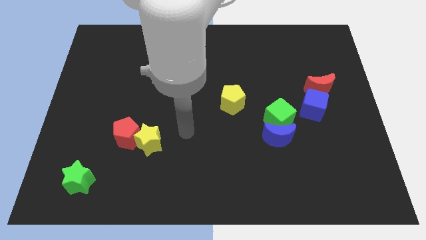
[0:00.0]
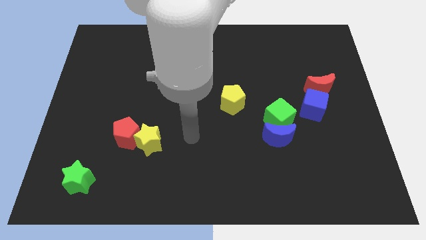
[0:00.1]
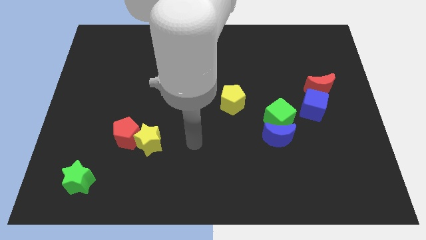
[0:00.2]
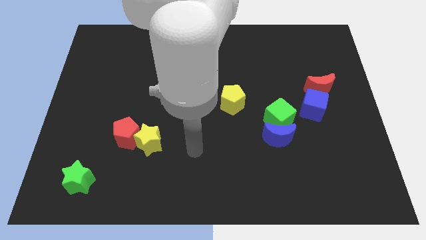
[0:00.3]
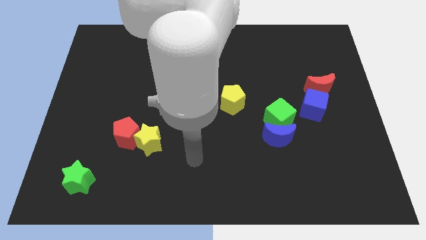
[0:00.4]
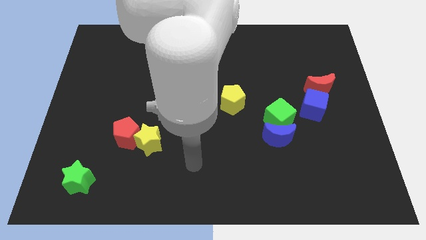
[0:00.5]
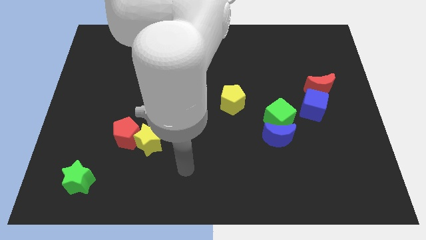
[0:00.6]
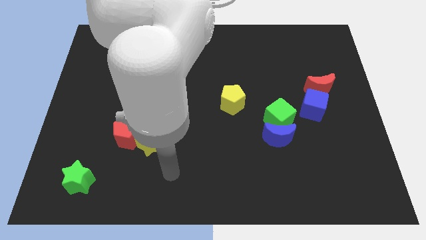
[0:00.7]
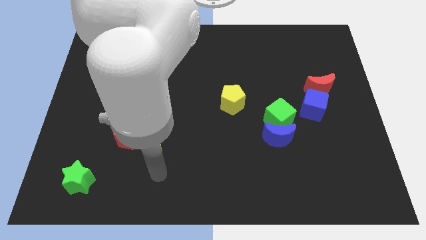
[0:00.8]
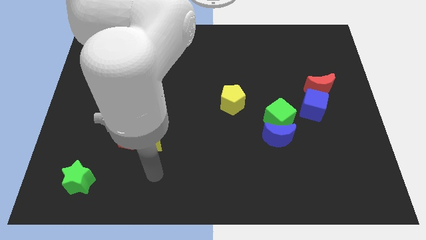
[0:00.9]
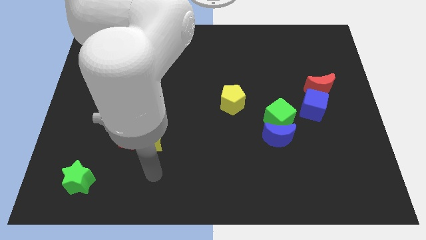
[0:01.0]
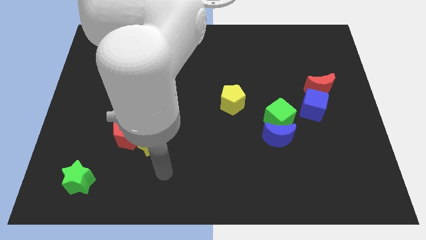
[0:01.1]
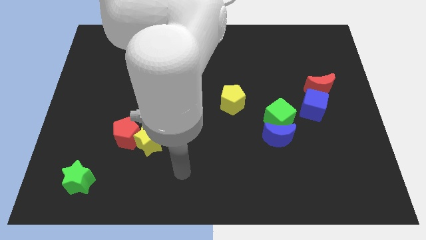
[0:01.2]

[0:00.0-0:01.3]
move your arm towards bottom center

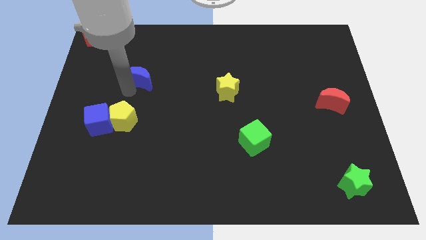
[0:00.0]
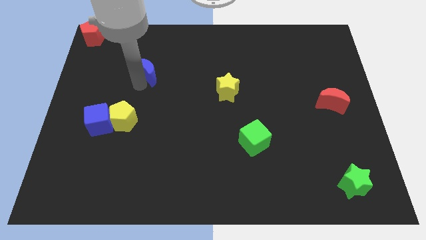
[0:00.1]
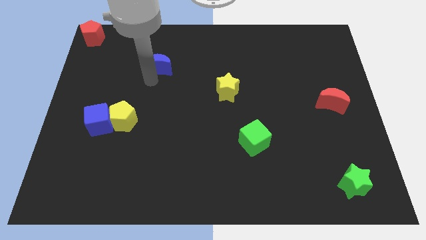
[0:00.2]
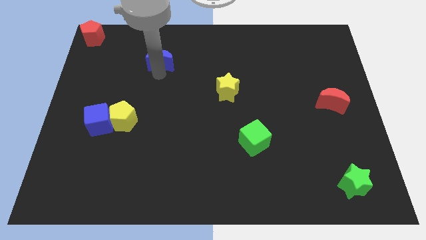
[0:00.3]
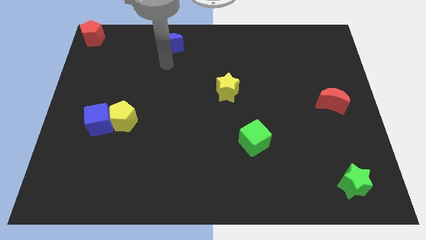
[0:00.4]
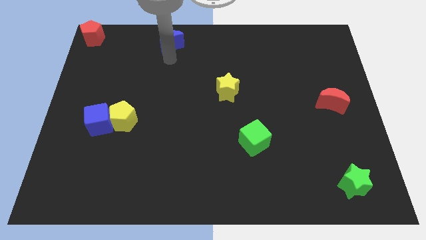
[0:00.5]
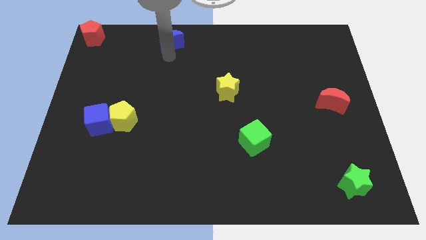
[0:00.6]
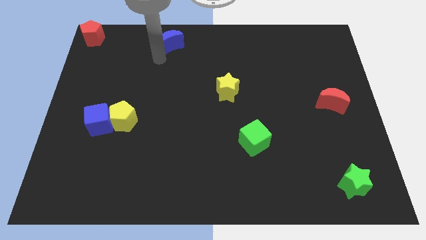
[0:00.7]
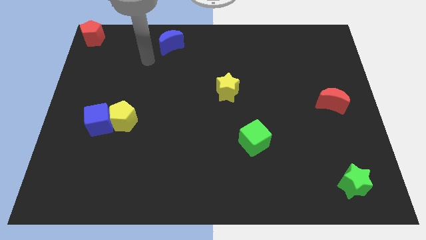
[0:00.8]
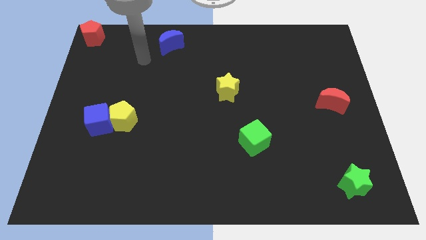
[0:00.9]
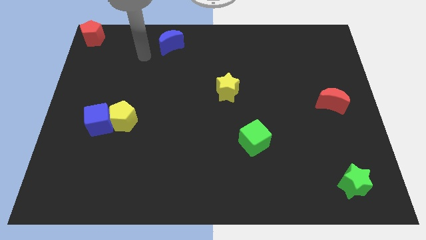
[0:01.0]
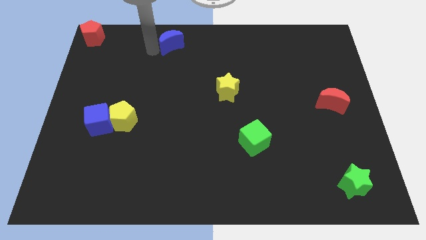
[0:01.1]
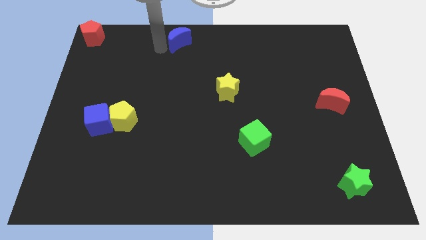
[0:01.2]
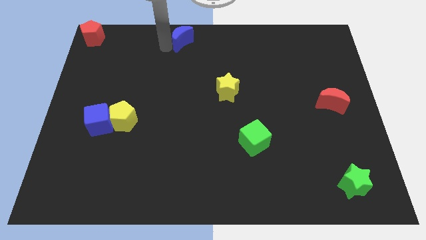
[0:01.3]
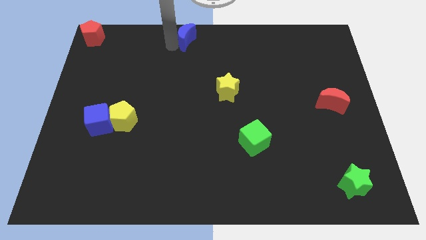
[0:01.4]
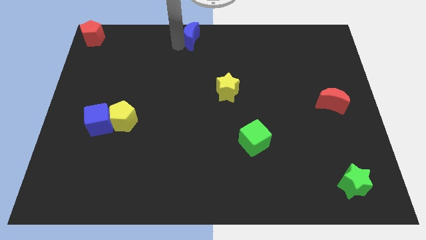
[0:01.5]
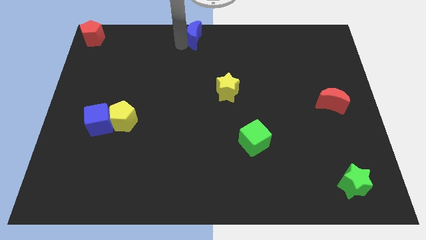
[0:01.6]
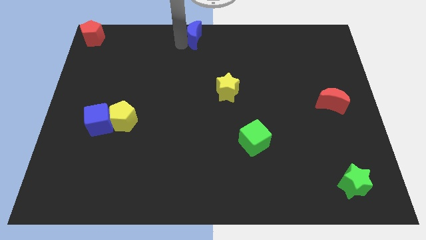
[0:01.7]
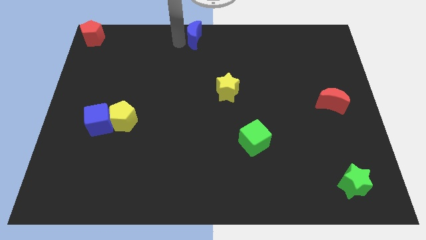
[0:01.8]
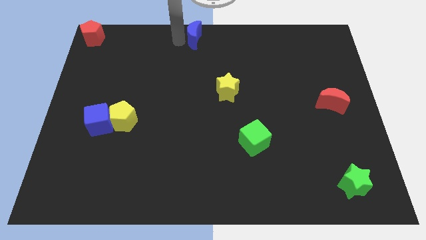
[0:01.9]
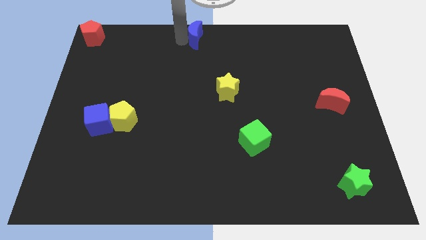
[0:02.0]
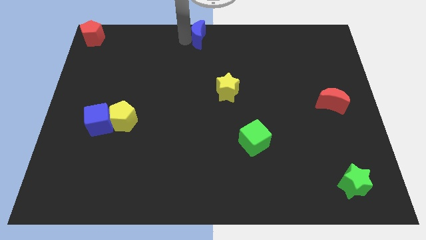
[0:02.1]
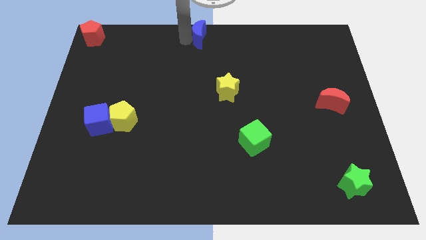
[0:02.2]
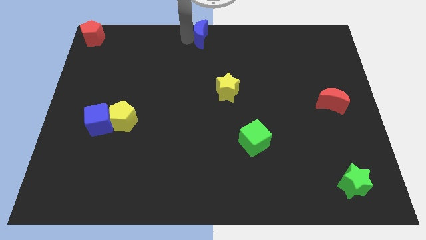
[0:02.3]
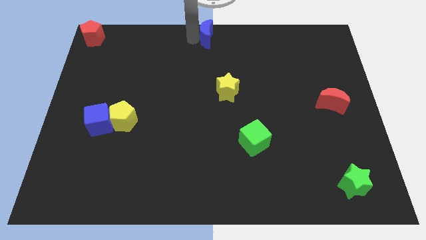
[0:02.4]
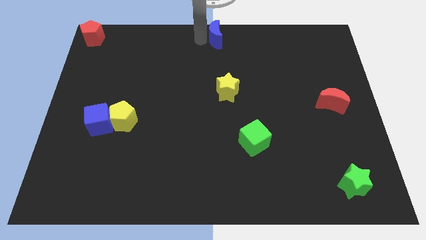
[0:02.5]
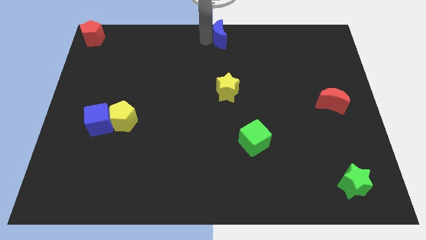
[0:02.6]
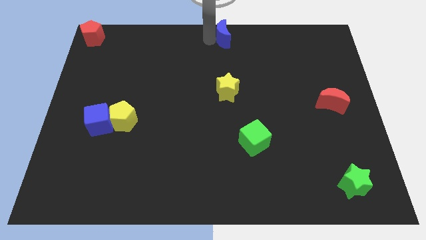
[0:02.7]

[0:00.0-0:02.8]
push the blue crescent to the top center

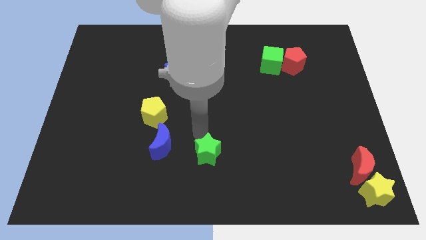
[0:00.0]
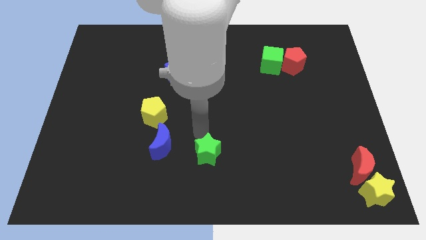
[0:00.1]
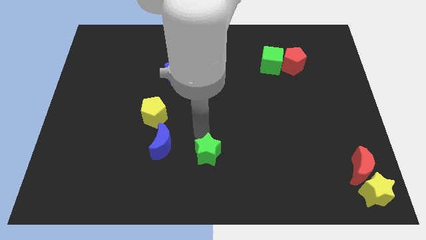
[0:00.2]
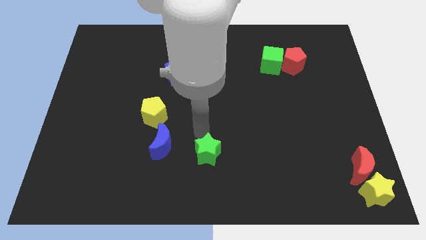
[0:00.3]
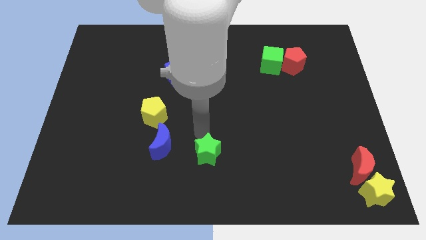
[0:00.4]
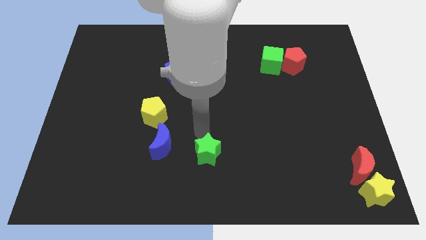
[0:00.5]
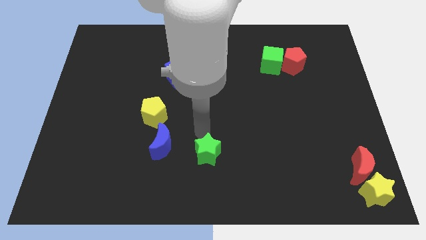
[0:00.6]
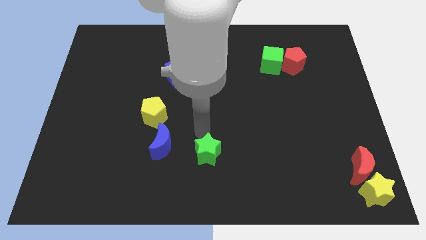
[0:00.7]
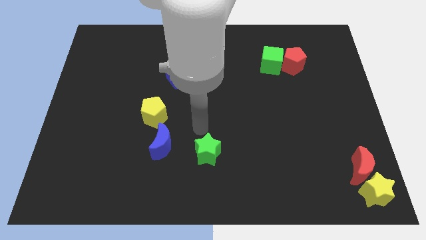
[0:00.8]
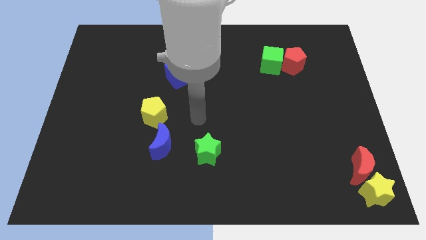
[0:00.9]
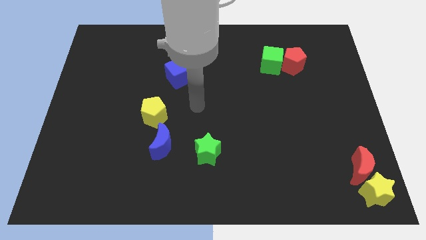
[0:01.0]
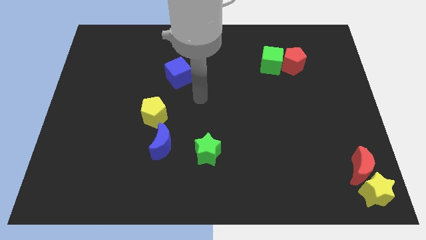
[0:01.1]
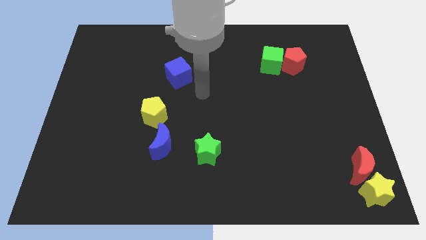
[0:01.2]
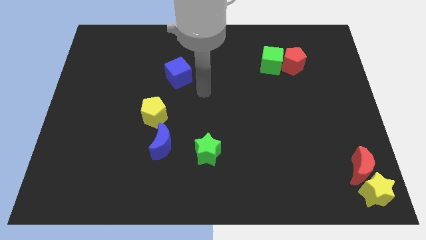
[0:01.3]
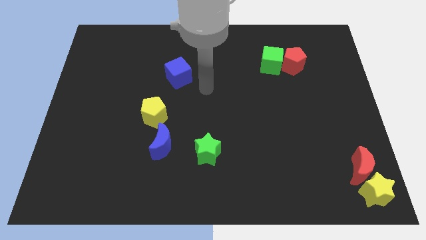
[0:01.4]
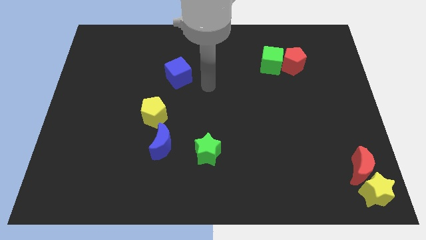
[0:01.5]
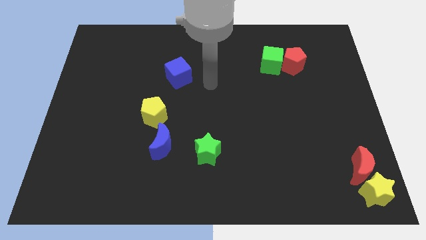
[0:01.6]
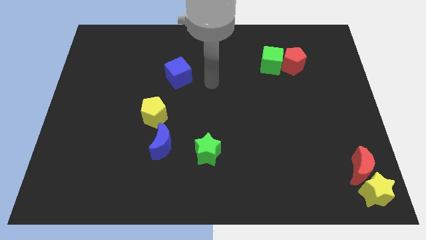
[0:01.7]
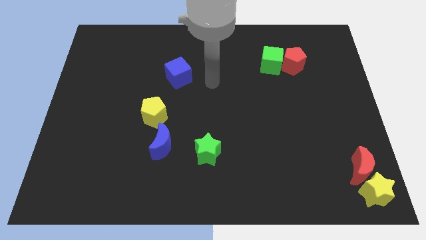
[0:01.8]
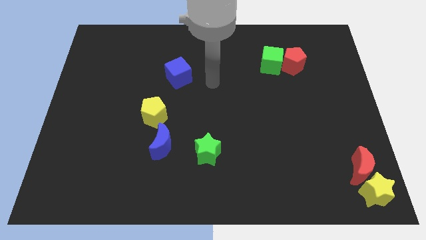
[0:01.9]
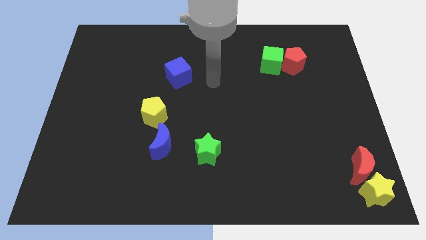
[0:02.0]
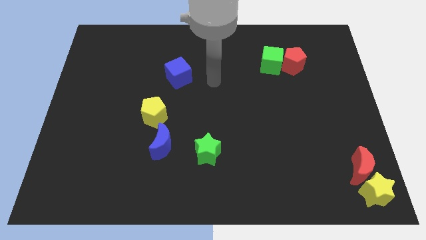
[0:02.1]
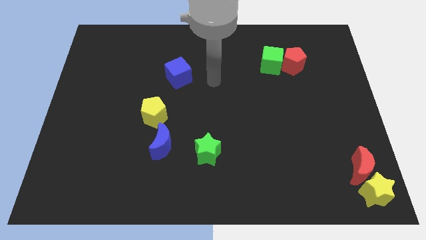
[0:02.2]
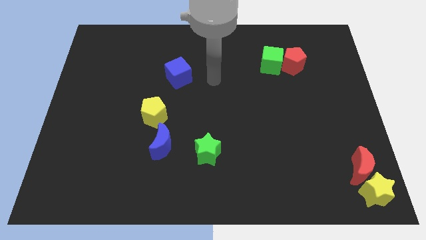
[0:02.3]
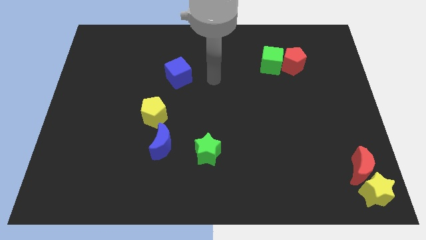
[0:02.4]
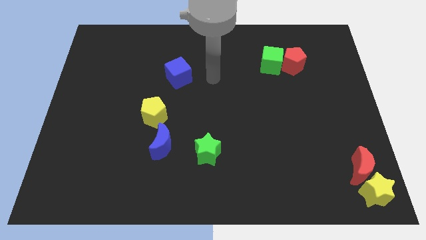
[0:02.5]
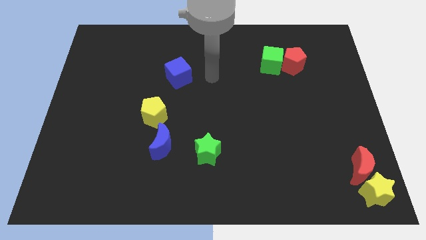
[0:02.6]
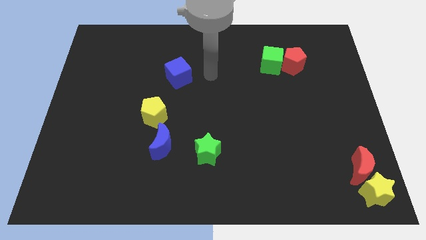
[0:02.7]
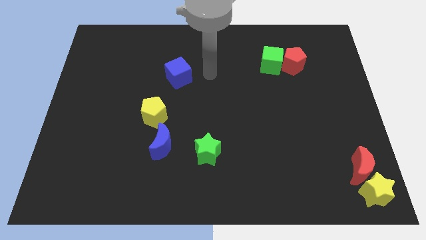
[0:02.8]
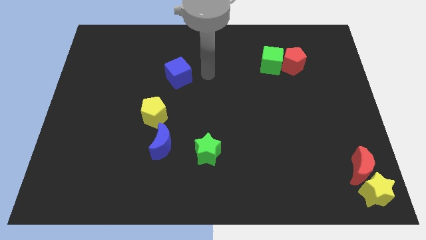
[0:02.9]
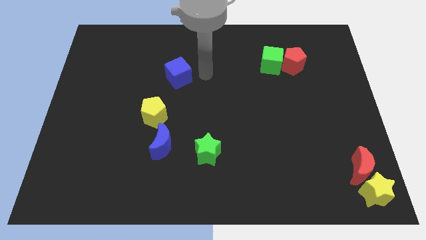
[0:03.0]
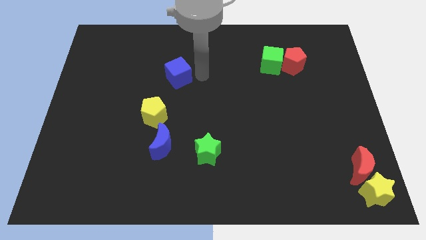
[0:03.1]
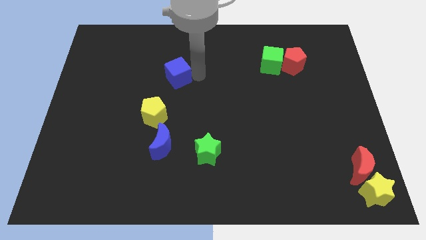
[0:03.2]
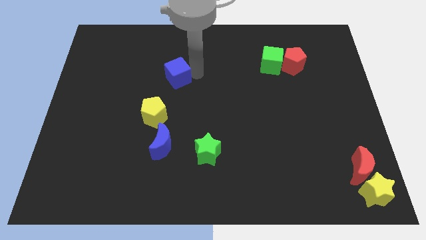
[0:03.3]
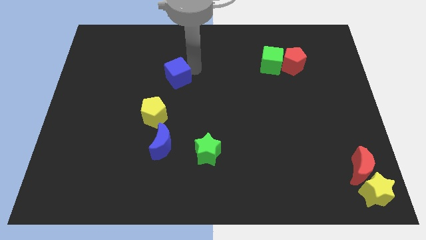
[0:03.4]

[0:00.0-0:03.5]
move your arm and point towards blue cube

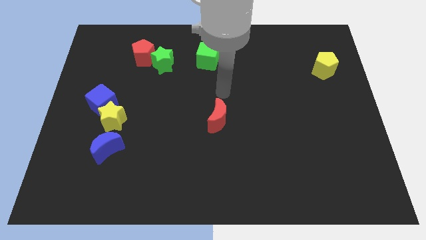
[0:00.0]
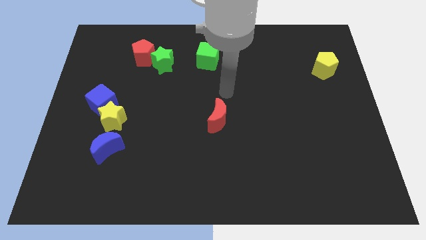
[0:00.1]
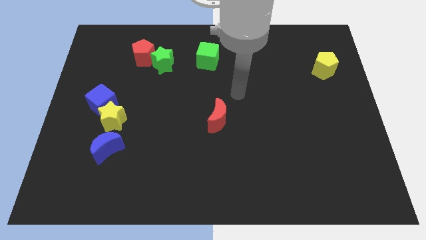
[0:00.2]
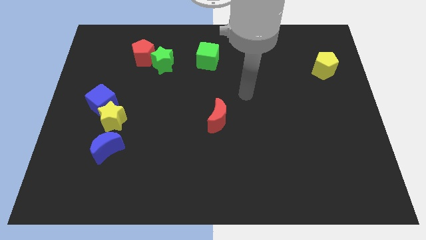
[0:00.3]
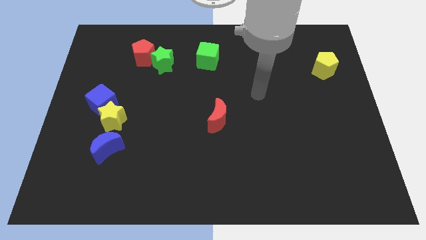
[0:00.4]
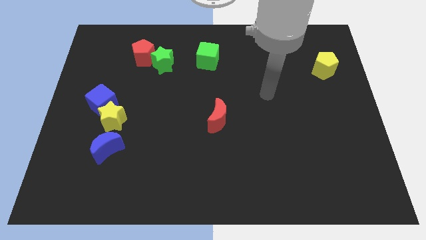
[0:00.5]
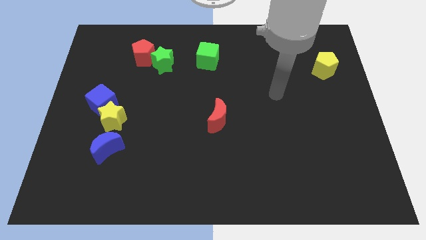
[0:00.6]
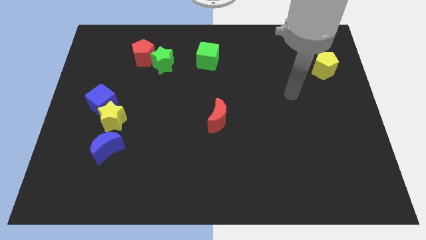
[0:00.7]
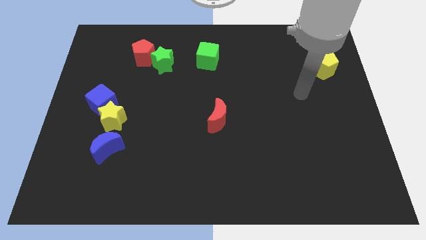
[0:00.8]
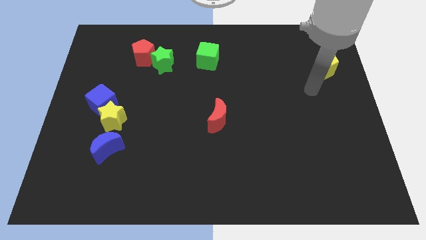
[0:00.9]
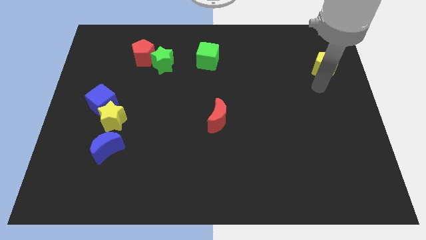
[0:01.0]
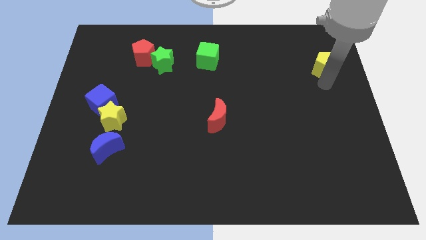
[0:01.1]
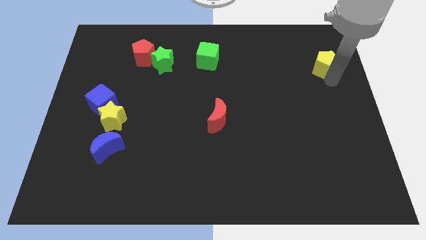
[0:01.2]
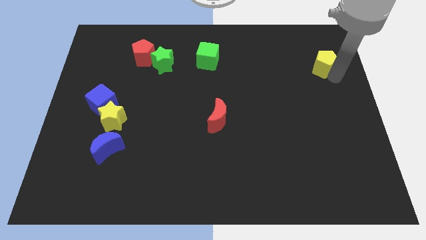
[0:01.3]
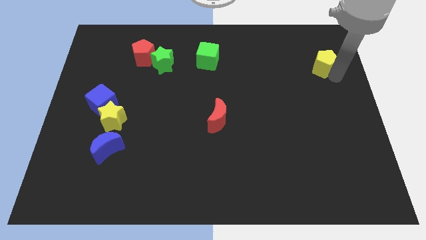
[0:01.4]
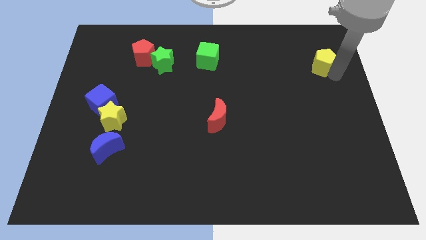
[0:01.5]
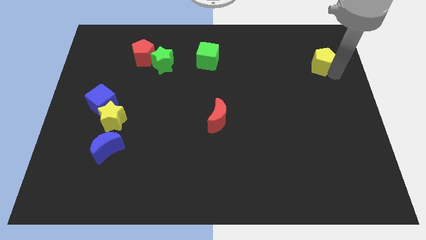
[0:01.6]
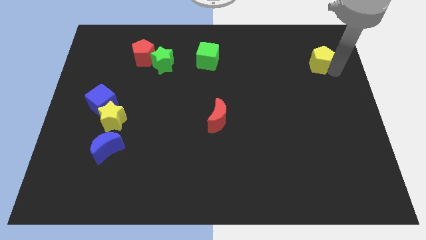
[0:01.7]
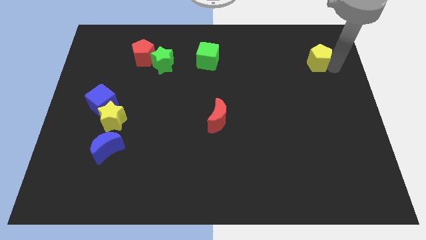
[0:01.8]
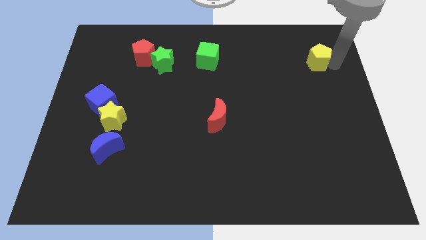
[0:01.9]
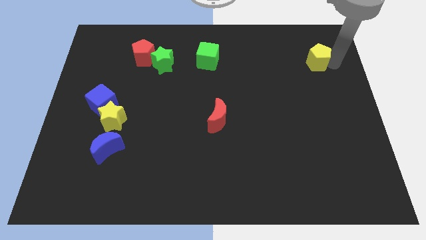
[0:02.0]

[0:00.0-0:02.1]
push the yellow pentagon slightly to the top right of the board
